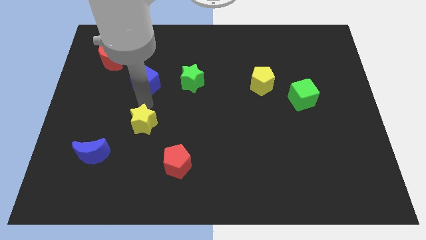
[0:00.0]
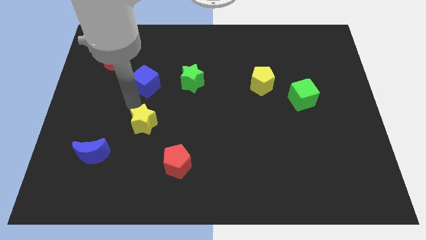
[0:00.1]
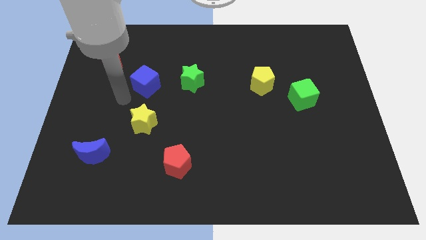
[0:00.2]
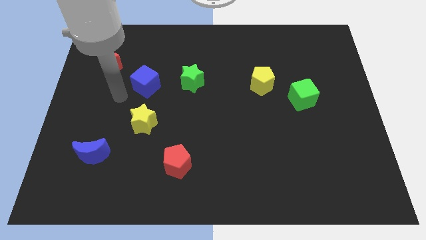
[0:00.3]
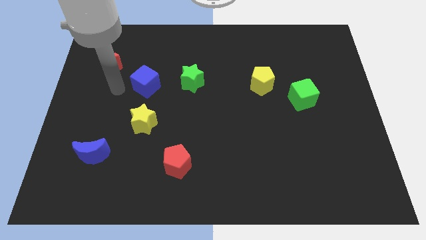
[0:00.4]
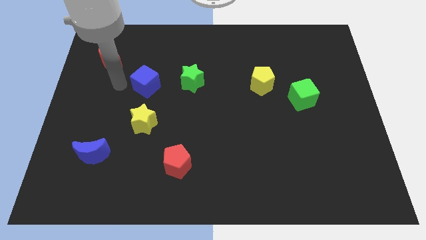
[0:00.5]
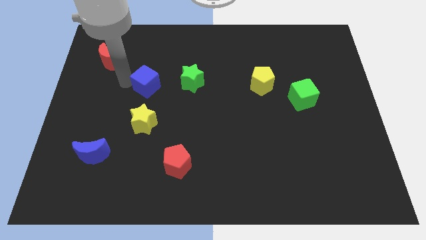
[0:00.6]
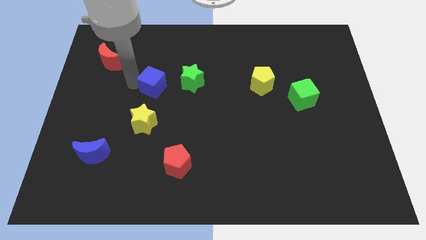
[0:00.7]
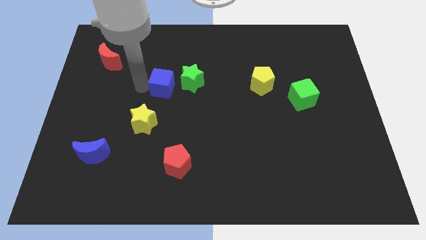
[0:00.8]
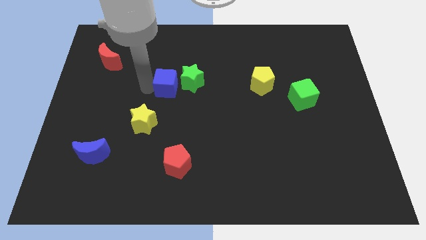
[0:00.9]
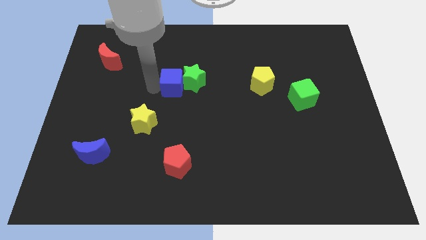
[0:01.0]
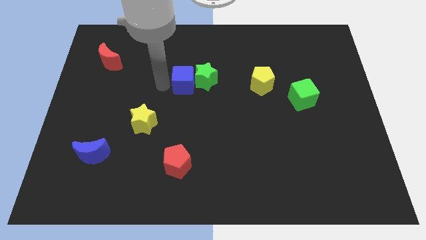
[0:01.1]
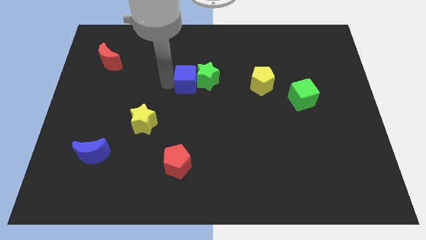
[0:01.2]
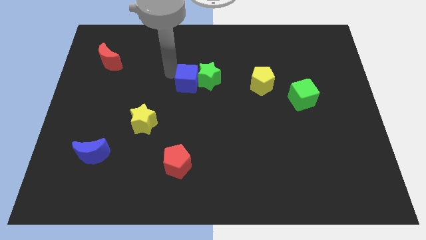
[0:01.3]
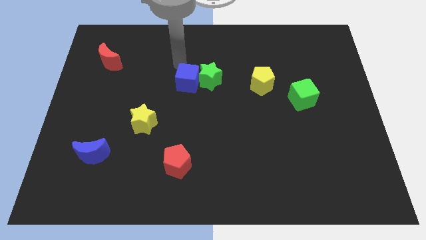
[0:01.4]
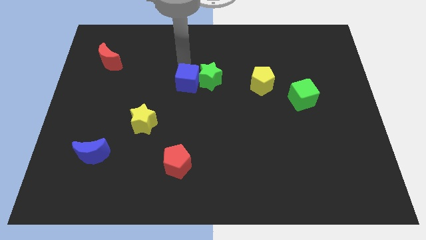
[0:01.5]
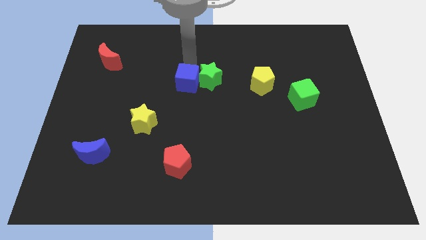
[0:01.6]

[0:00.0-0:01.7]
push the blue cube into the green star

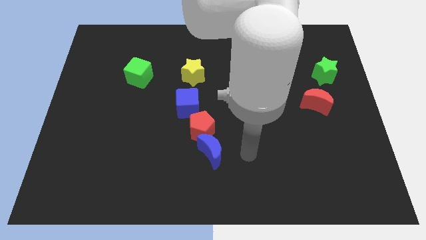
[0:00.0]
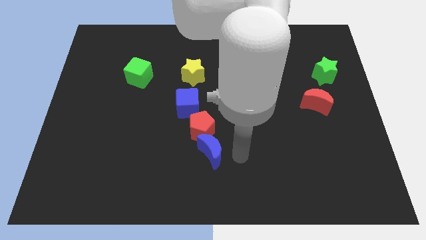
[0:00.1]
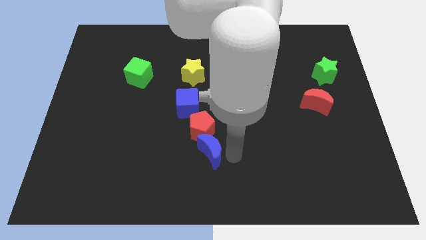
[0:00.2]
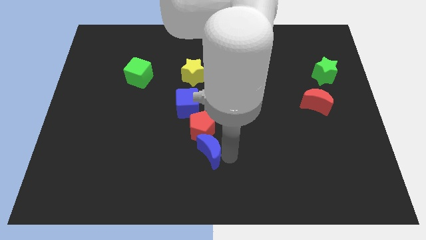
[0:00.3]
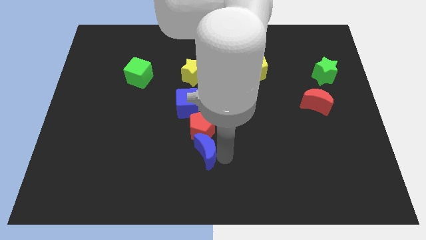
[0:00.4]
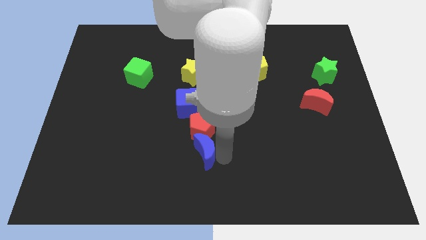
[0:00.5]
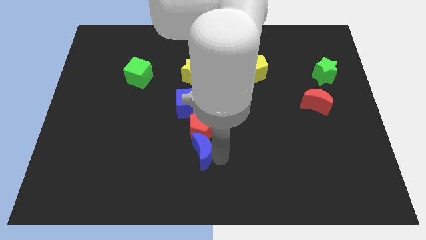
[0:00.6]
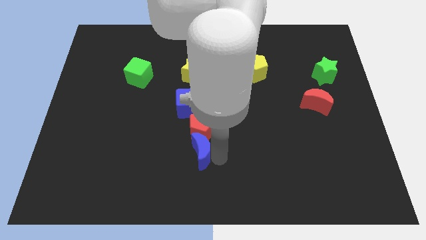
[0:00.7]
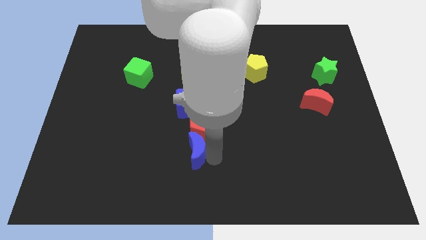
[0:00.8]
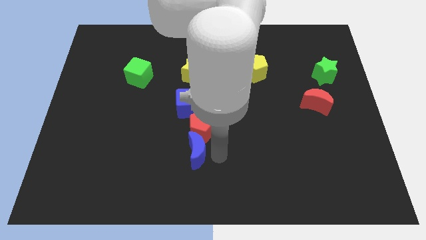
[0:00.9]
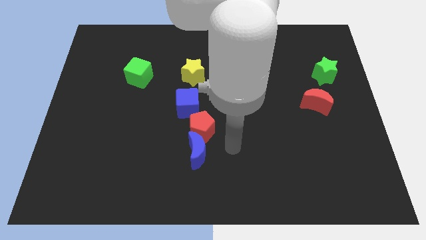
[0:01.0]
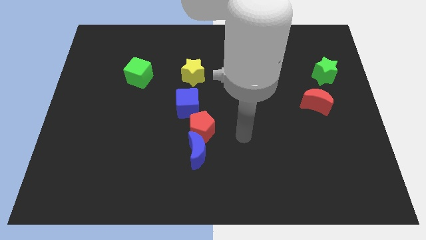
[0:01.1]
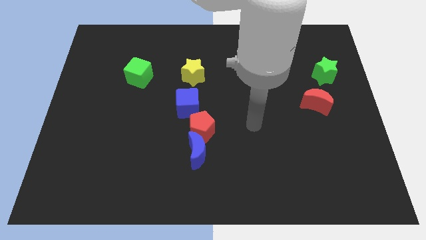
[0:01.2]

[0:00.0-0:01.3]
slightly adjust the blue moon below the red pentagon

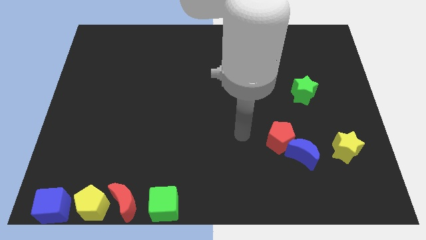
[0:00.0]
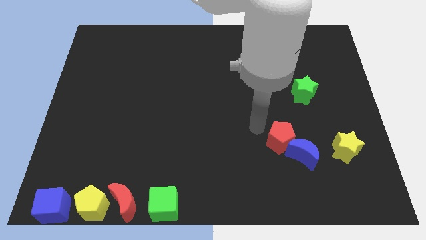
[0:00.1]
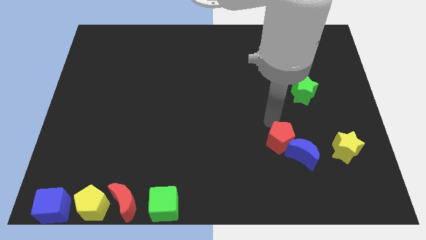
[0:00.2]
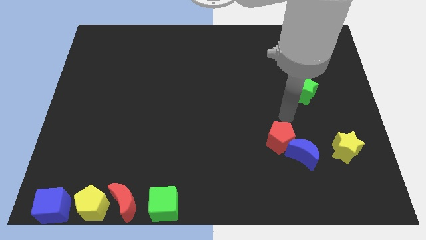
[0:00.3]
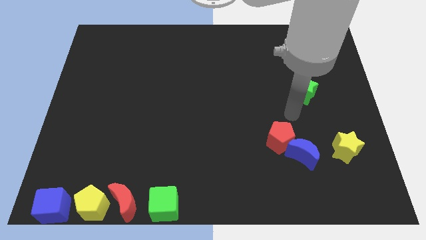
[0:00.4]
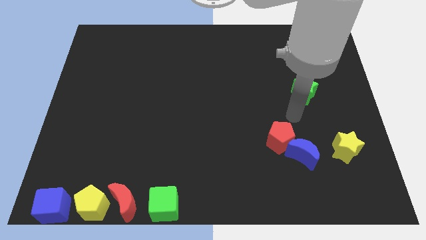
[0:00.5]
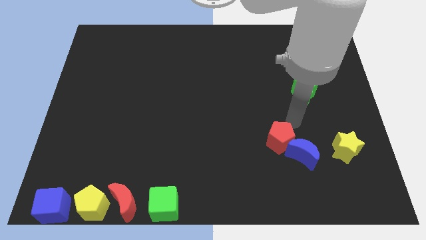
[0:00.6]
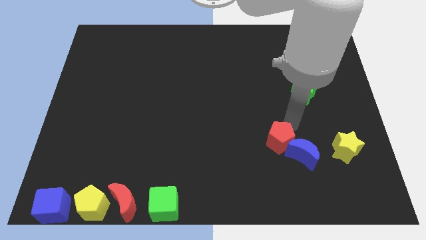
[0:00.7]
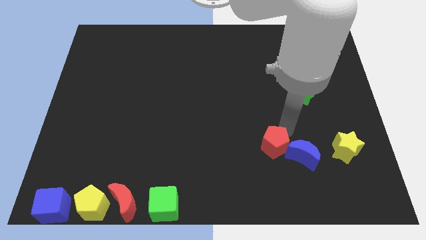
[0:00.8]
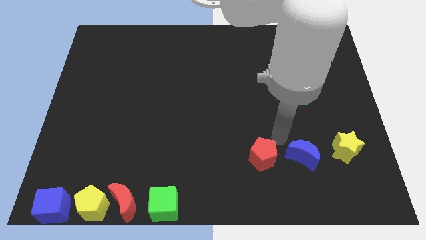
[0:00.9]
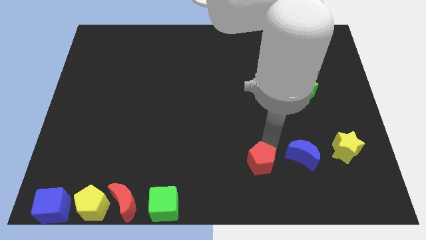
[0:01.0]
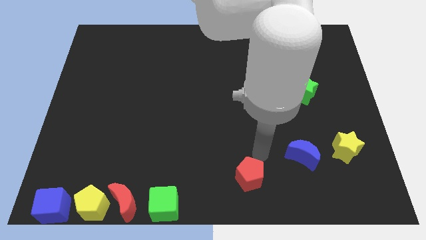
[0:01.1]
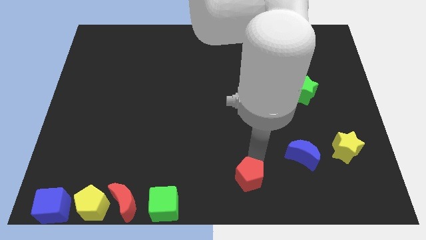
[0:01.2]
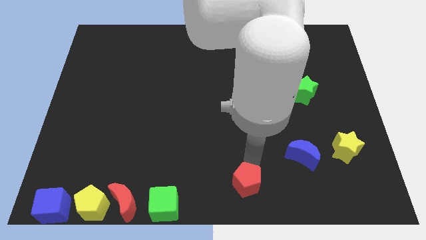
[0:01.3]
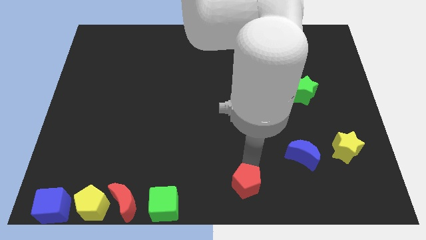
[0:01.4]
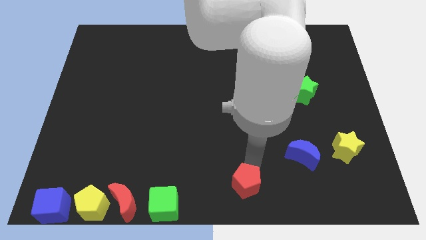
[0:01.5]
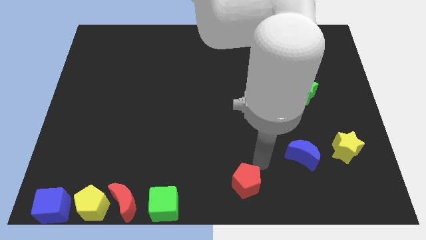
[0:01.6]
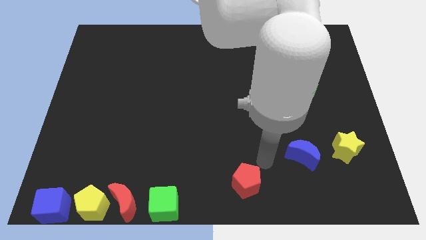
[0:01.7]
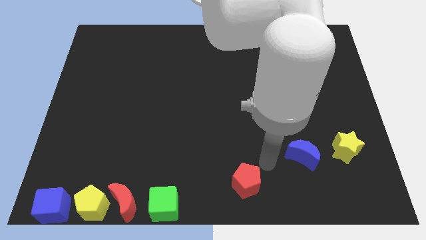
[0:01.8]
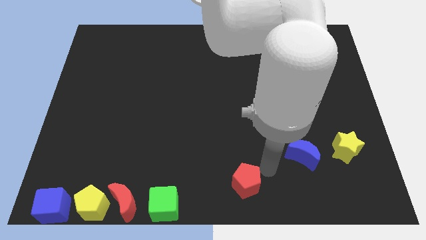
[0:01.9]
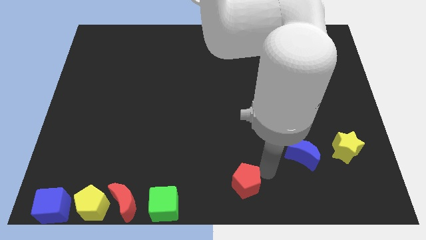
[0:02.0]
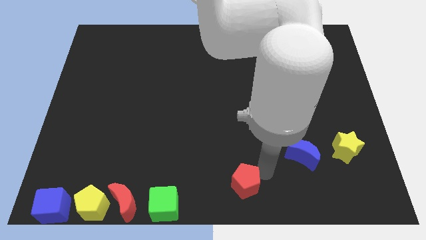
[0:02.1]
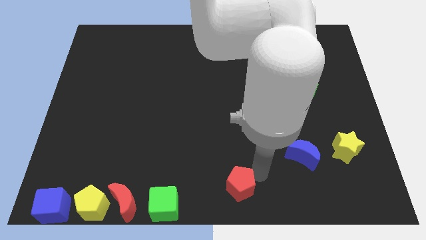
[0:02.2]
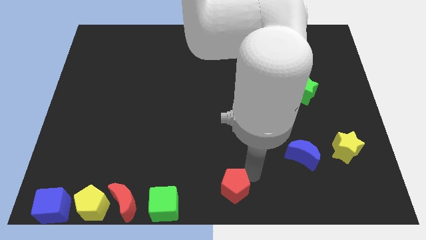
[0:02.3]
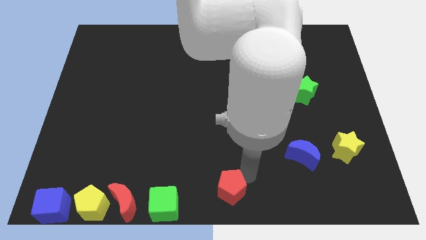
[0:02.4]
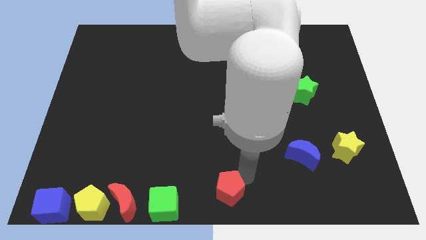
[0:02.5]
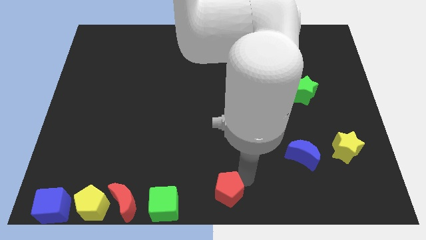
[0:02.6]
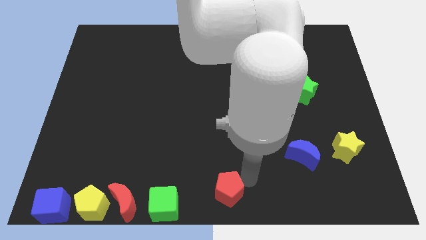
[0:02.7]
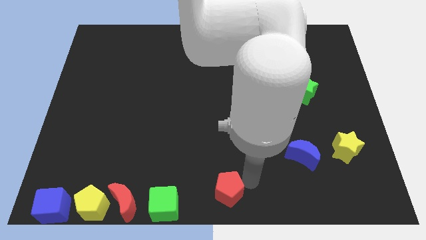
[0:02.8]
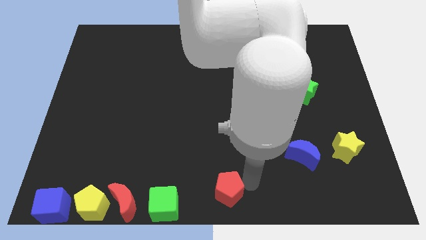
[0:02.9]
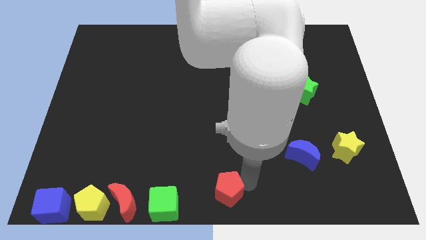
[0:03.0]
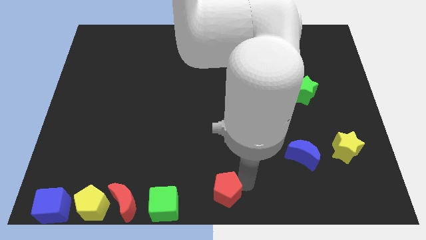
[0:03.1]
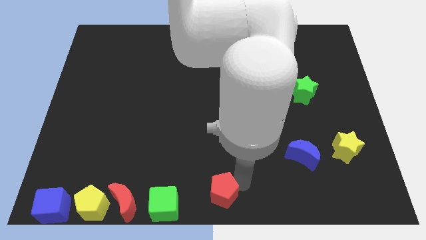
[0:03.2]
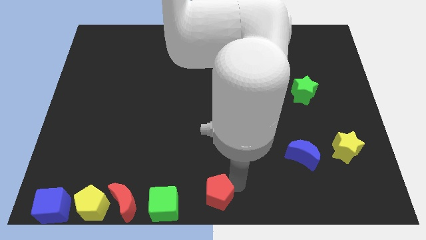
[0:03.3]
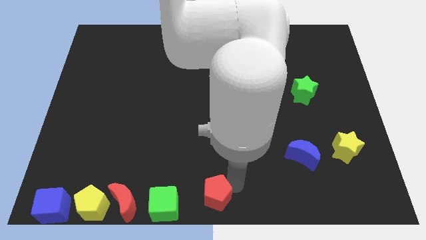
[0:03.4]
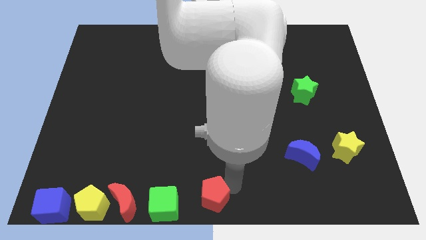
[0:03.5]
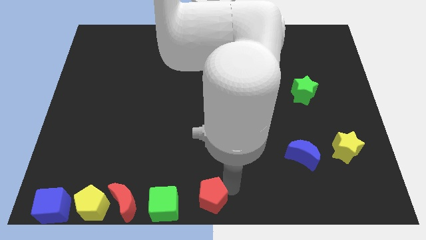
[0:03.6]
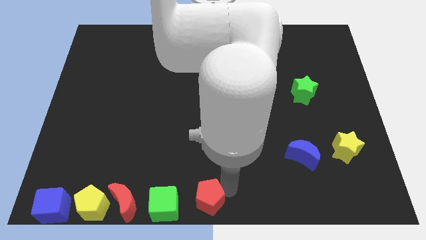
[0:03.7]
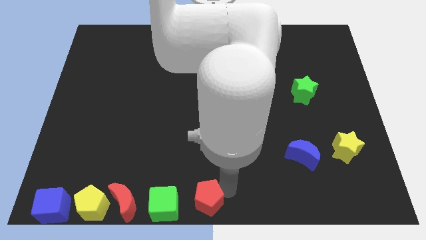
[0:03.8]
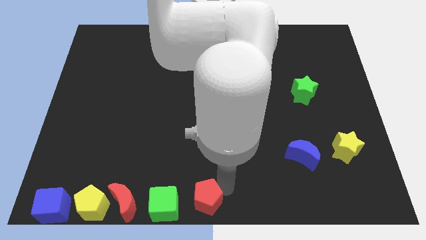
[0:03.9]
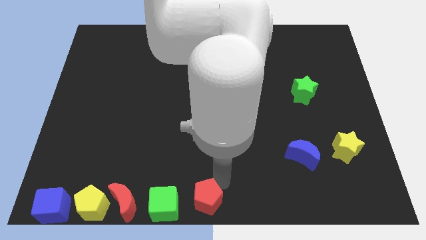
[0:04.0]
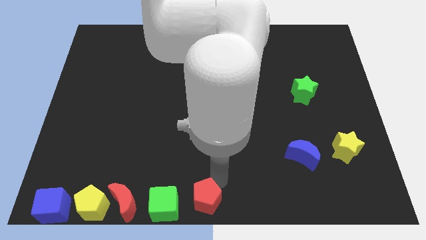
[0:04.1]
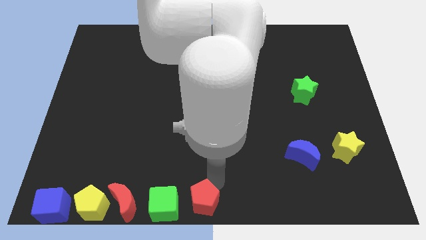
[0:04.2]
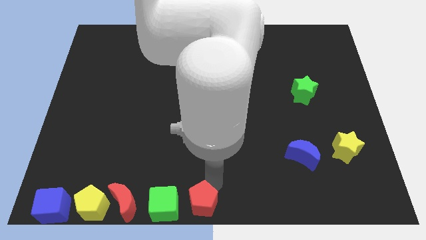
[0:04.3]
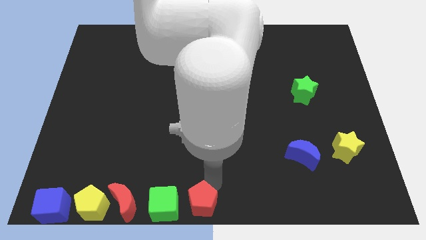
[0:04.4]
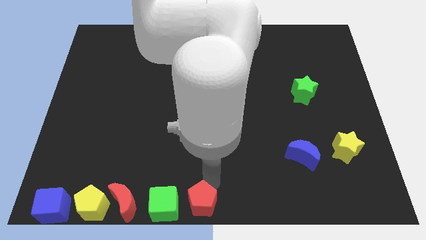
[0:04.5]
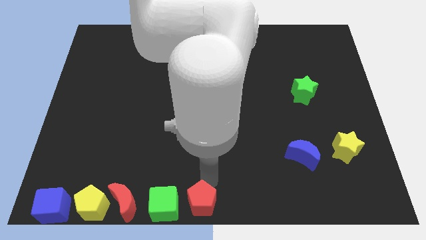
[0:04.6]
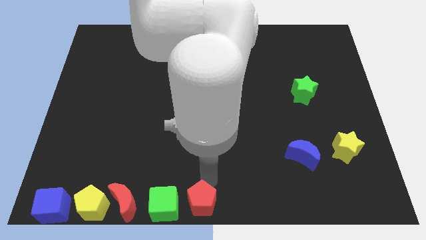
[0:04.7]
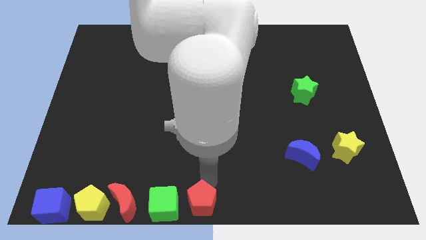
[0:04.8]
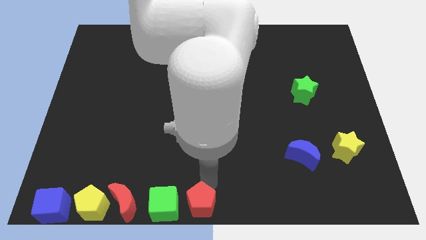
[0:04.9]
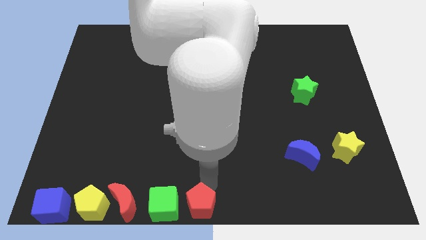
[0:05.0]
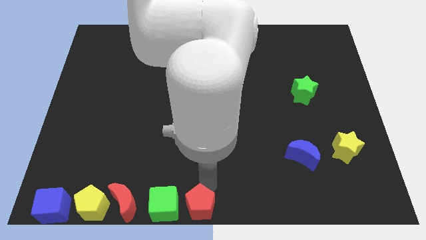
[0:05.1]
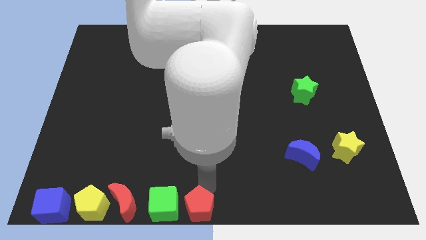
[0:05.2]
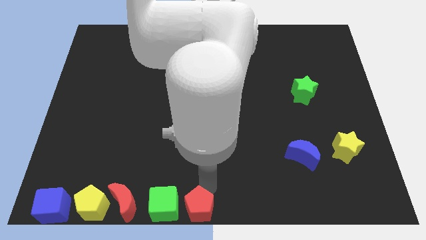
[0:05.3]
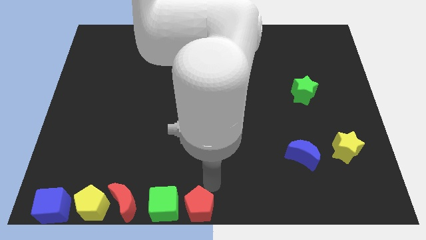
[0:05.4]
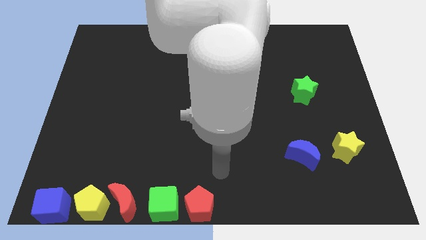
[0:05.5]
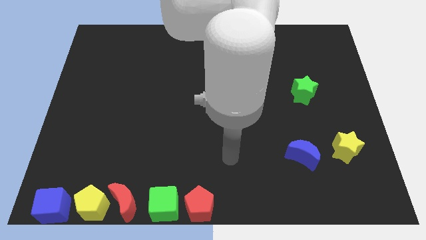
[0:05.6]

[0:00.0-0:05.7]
push the red pentagon to the right side of the green cube

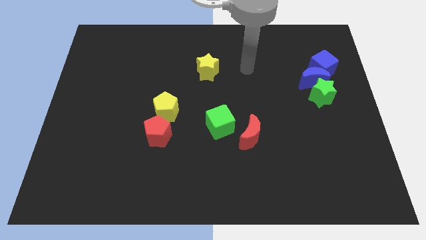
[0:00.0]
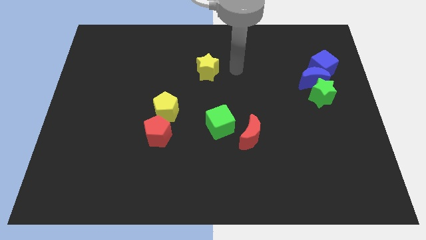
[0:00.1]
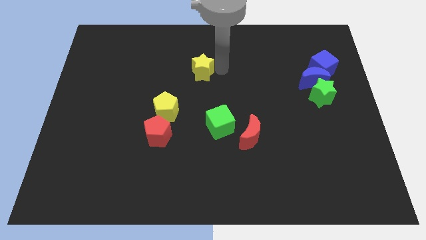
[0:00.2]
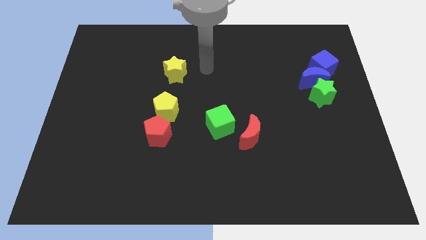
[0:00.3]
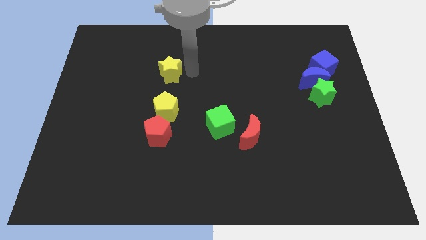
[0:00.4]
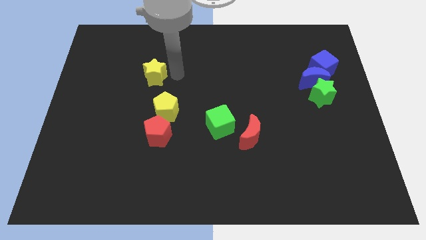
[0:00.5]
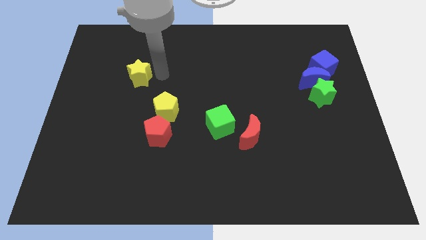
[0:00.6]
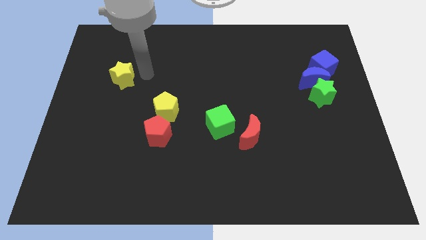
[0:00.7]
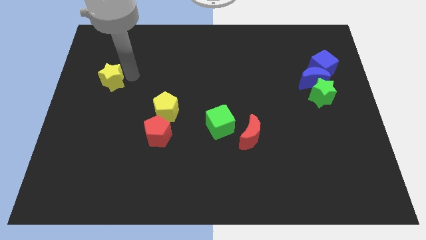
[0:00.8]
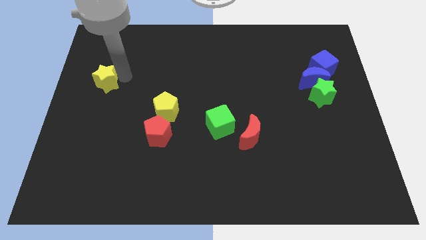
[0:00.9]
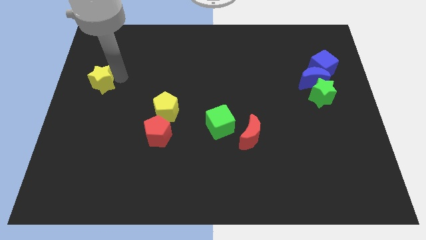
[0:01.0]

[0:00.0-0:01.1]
move the yellow star to the left of the board
